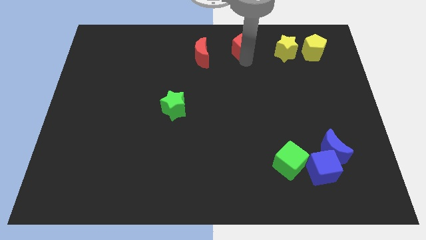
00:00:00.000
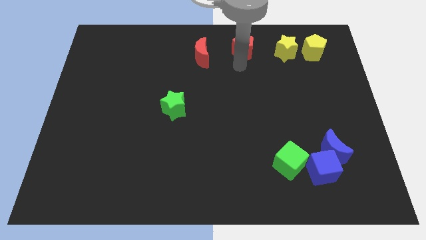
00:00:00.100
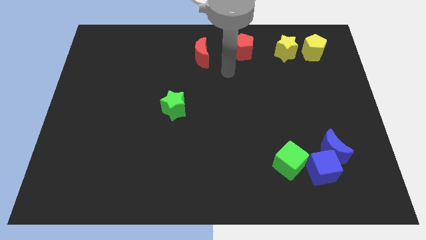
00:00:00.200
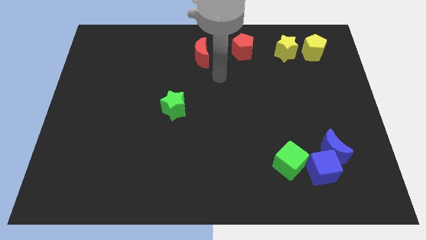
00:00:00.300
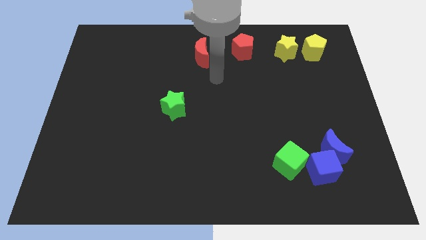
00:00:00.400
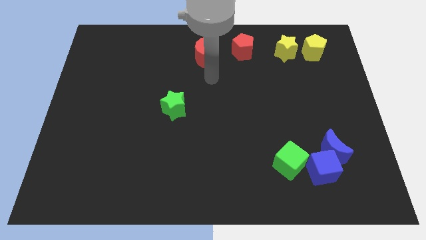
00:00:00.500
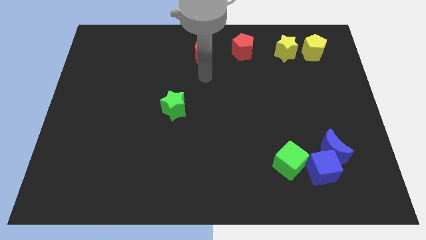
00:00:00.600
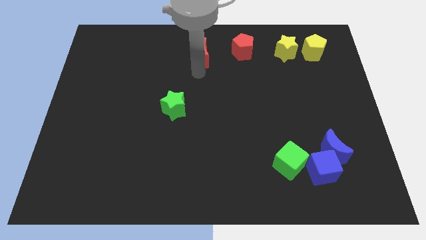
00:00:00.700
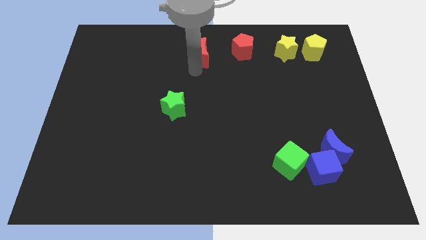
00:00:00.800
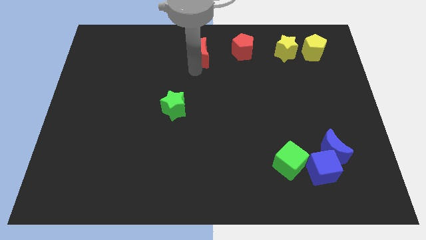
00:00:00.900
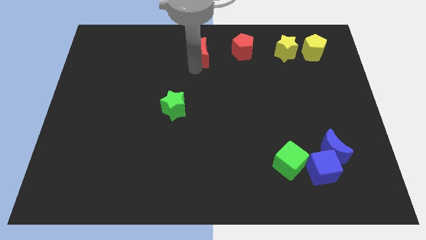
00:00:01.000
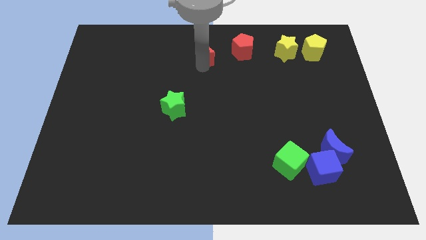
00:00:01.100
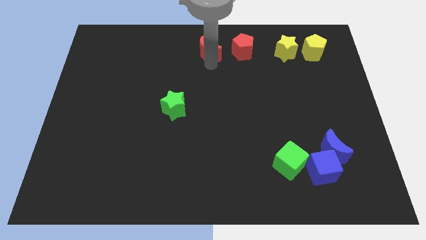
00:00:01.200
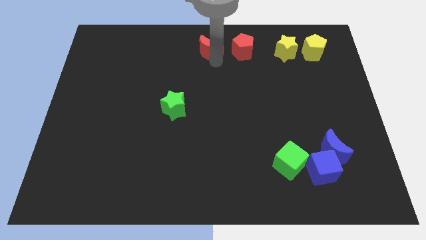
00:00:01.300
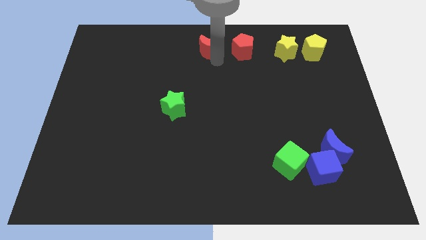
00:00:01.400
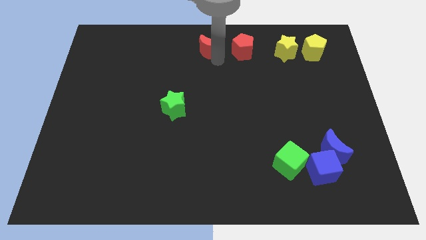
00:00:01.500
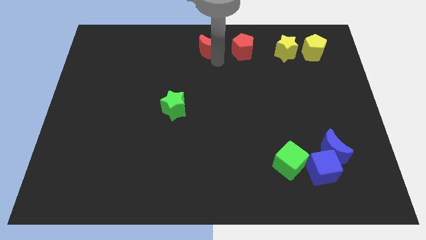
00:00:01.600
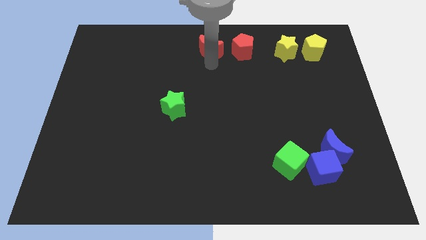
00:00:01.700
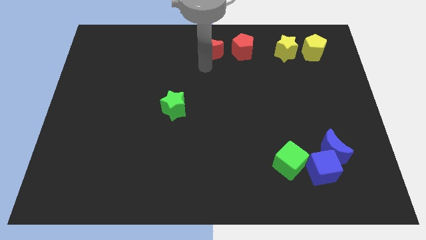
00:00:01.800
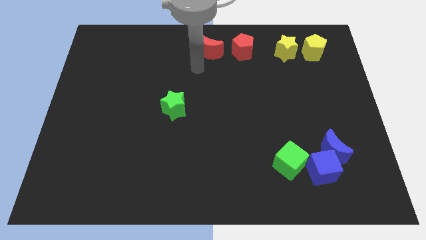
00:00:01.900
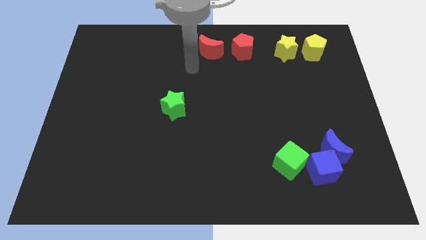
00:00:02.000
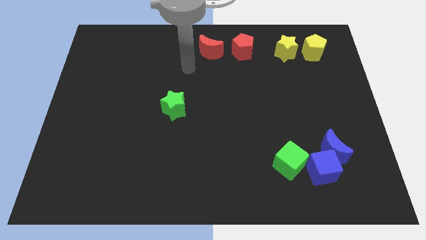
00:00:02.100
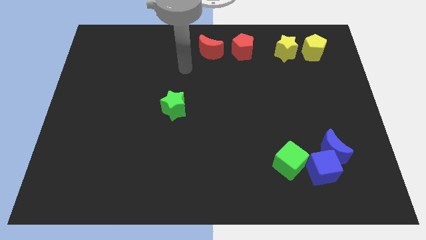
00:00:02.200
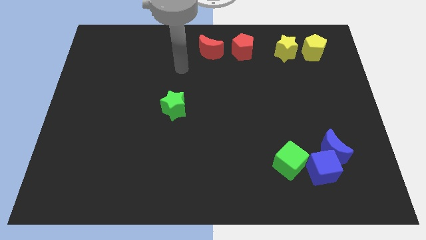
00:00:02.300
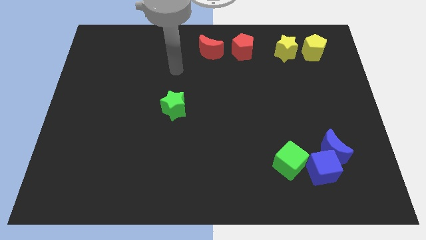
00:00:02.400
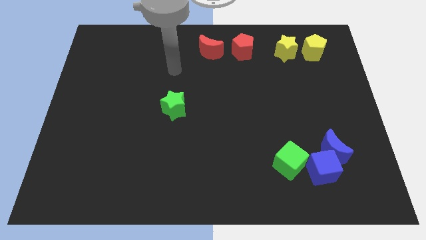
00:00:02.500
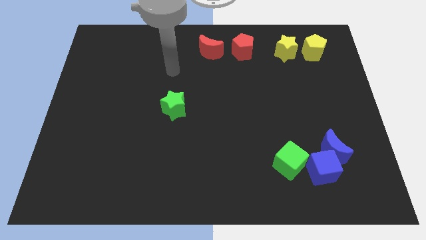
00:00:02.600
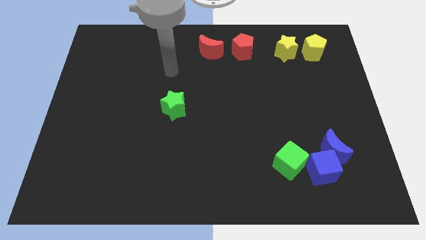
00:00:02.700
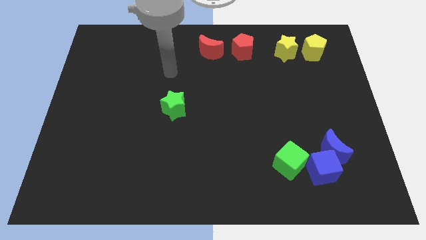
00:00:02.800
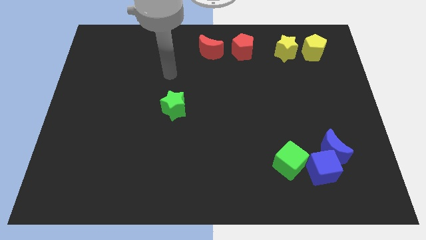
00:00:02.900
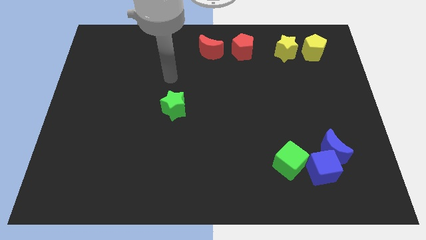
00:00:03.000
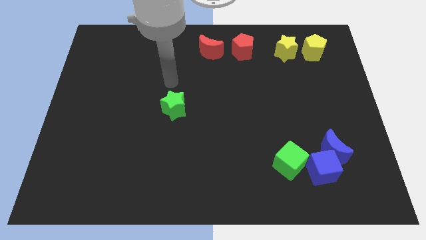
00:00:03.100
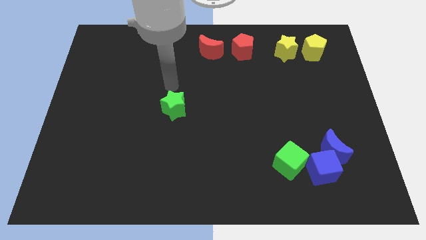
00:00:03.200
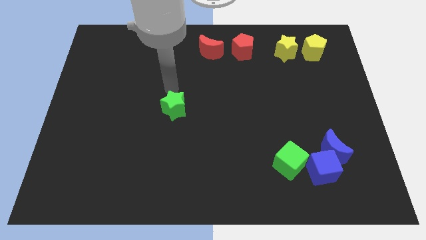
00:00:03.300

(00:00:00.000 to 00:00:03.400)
move red moon close to the red pentagon

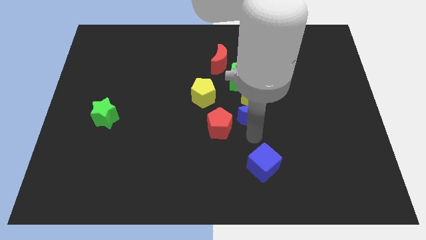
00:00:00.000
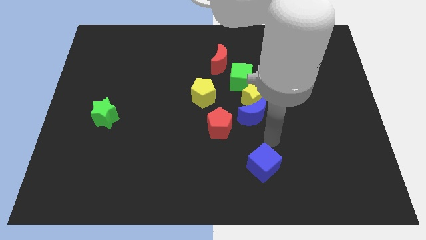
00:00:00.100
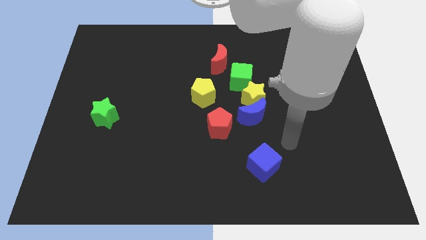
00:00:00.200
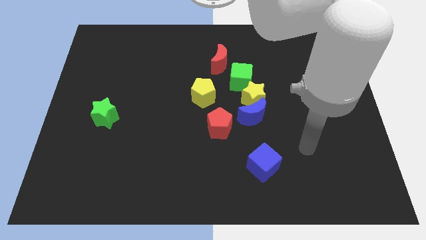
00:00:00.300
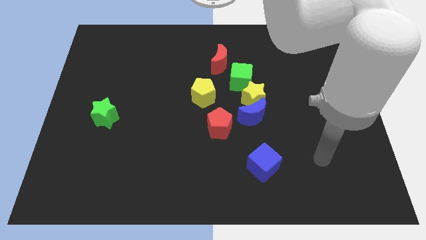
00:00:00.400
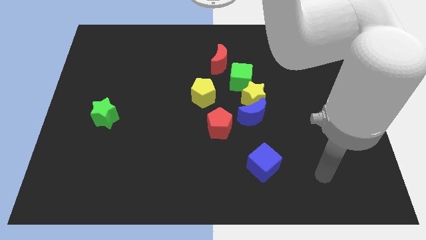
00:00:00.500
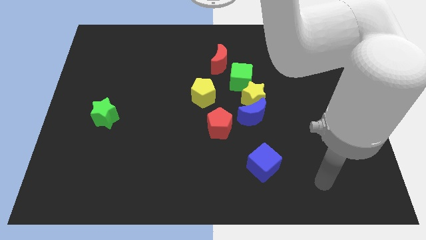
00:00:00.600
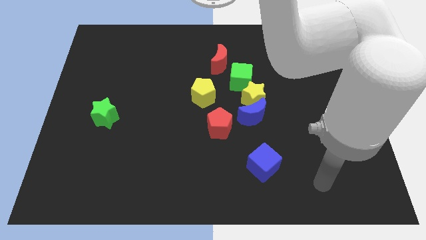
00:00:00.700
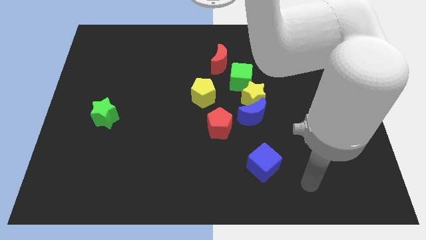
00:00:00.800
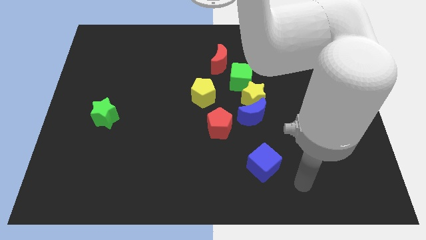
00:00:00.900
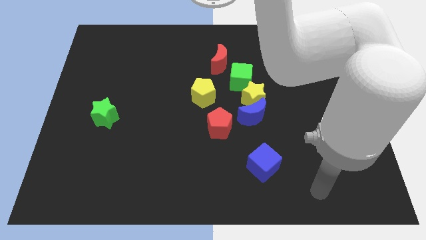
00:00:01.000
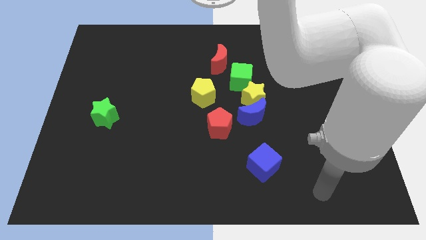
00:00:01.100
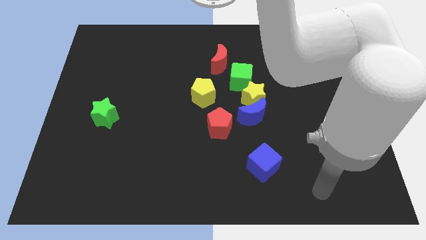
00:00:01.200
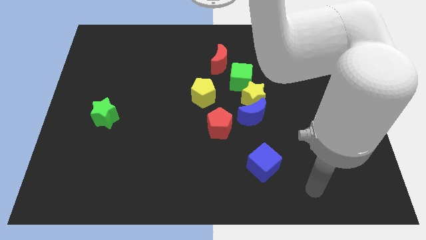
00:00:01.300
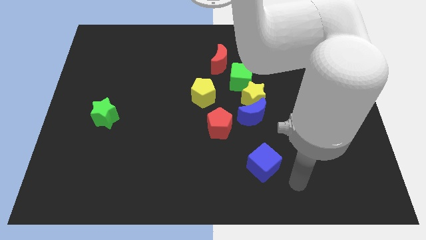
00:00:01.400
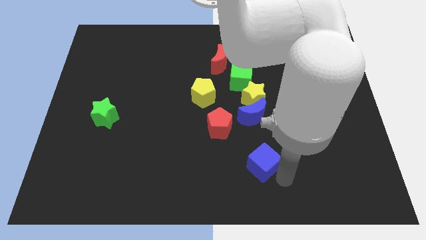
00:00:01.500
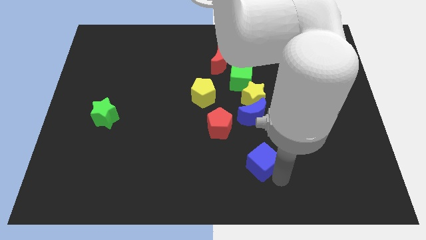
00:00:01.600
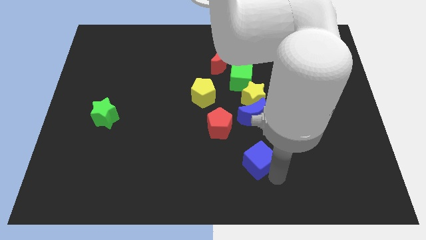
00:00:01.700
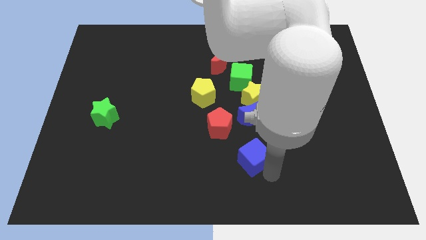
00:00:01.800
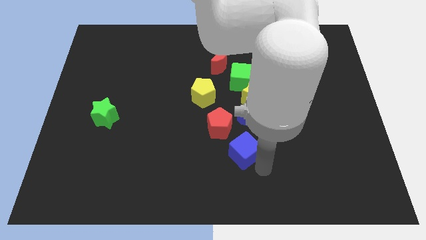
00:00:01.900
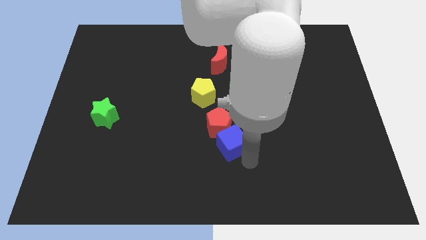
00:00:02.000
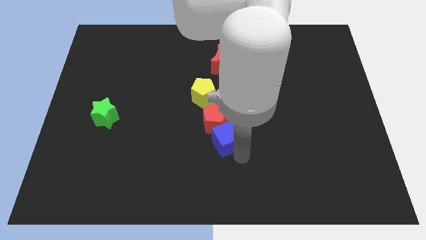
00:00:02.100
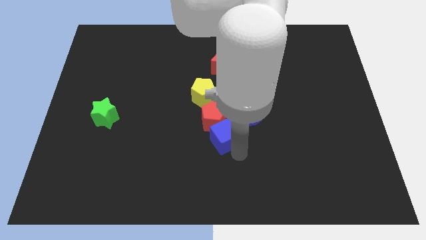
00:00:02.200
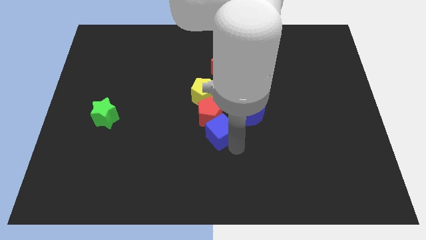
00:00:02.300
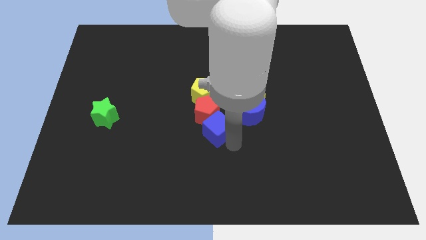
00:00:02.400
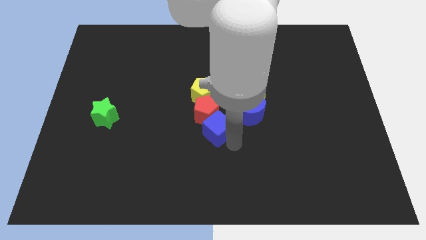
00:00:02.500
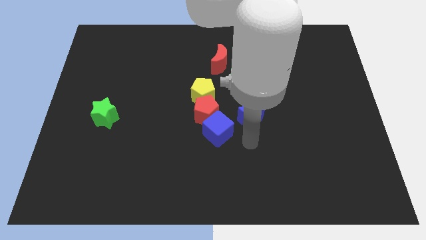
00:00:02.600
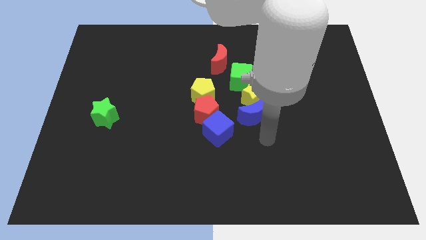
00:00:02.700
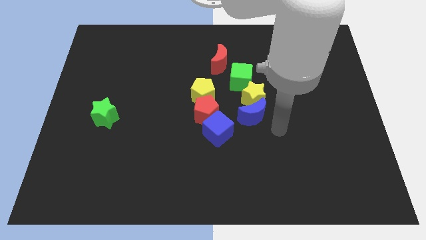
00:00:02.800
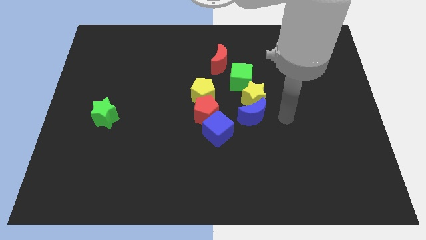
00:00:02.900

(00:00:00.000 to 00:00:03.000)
push the blue cube towards the bottom of the red pentagon

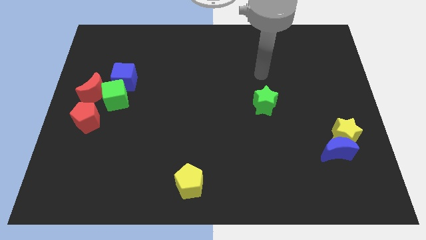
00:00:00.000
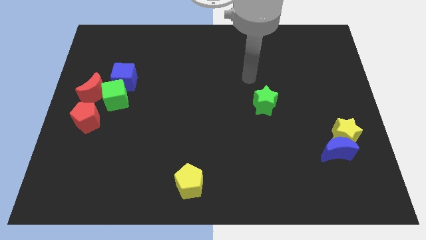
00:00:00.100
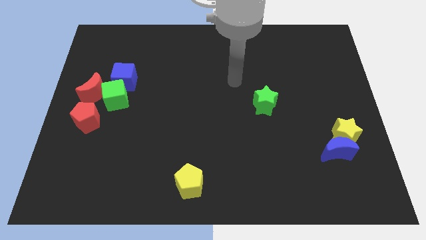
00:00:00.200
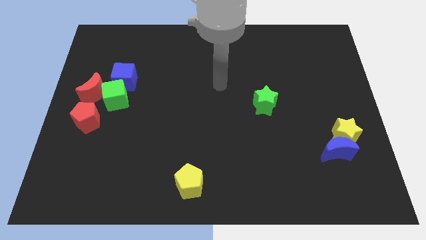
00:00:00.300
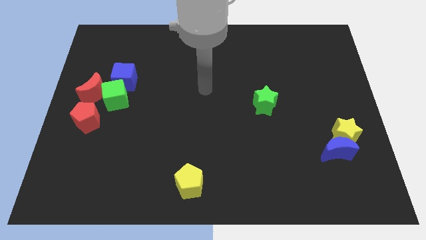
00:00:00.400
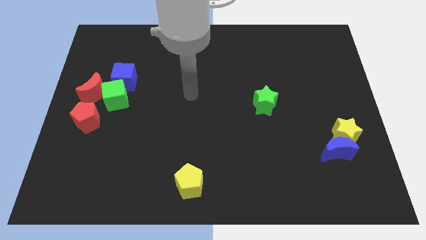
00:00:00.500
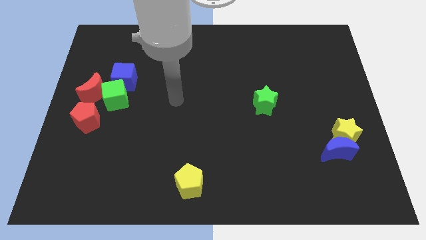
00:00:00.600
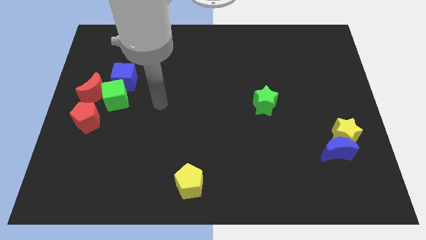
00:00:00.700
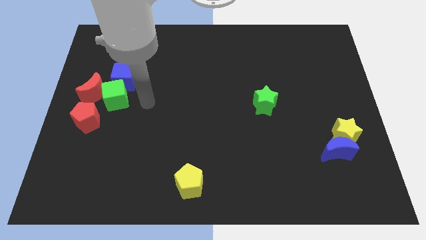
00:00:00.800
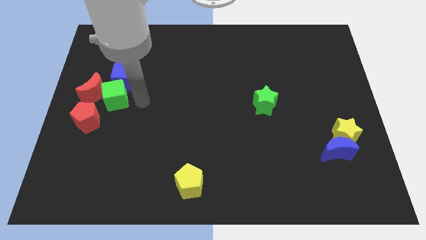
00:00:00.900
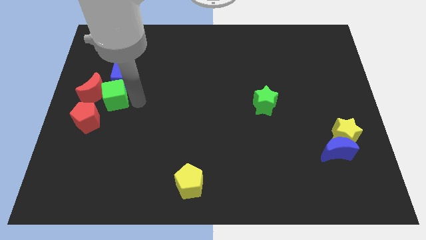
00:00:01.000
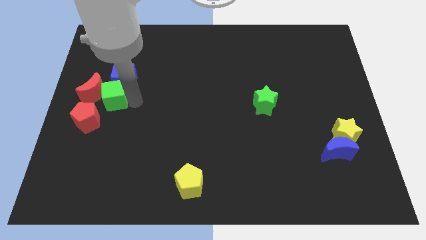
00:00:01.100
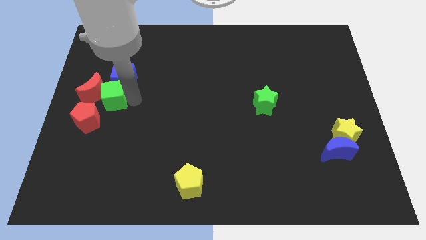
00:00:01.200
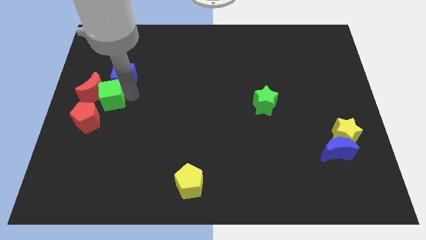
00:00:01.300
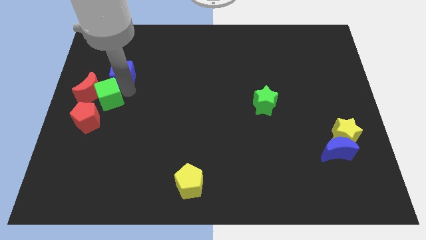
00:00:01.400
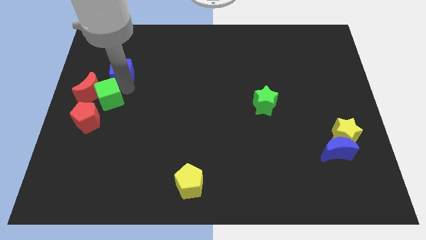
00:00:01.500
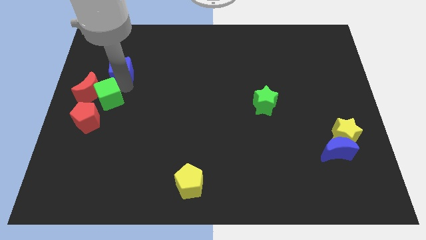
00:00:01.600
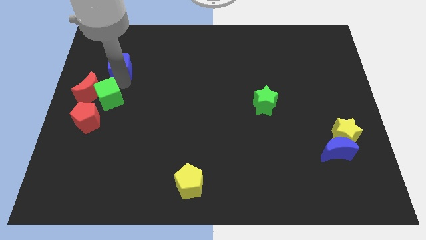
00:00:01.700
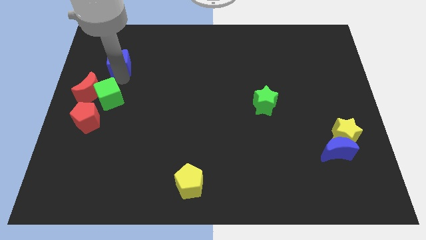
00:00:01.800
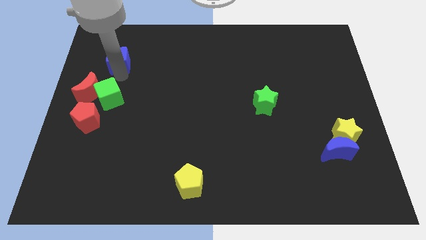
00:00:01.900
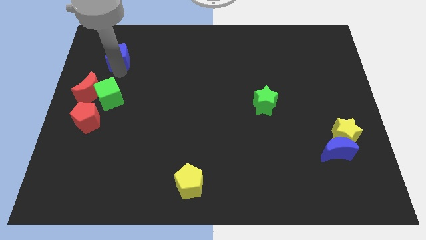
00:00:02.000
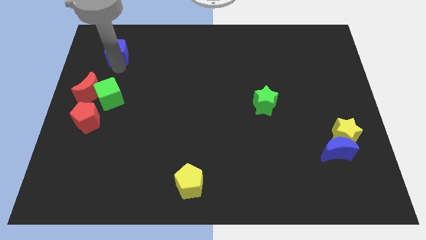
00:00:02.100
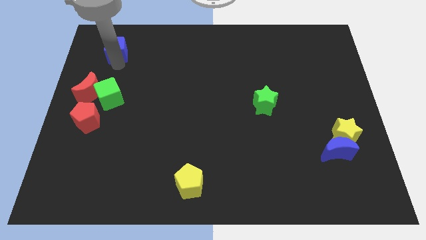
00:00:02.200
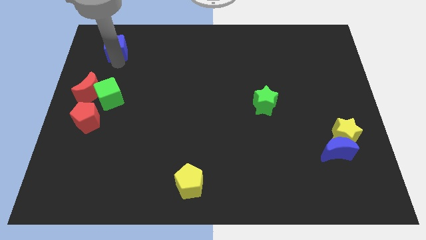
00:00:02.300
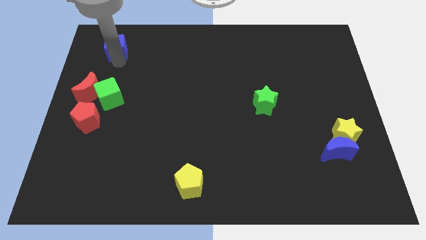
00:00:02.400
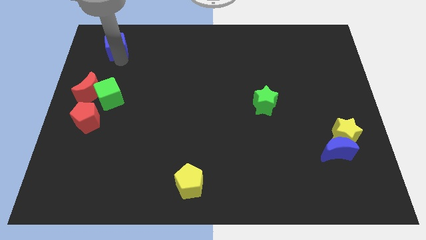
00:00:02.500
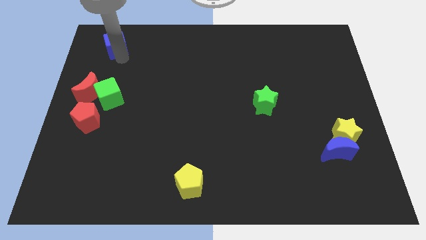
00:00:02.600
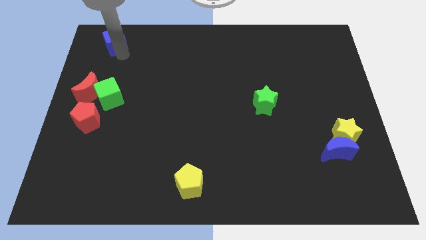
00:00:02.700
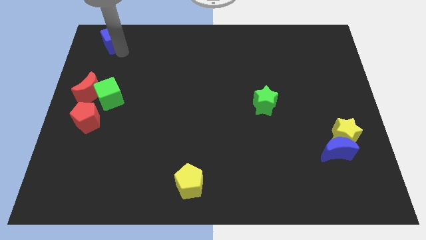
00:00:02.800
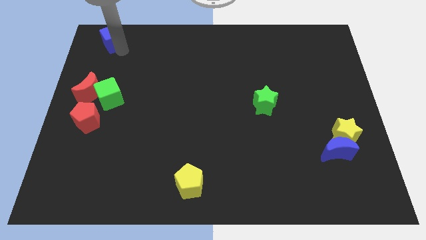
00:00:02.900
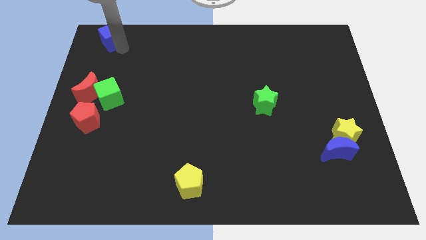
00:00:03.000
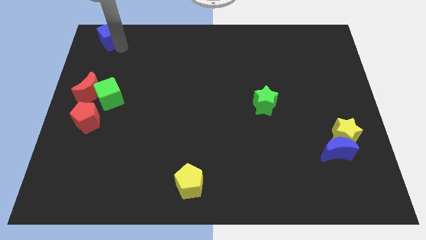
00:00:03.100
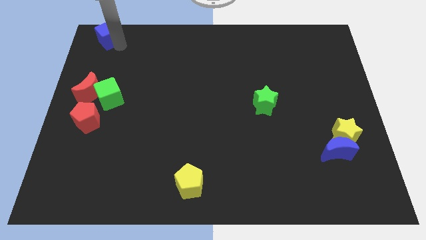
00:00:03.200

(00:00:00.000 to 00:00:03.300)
separate the blue cube from the group of blocks
